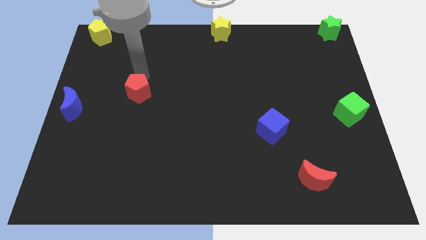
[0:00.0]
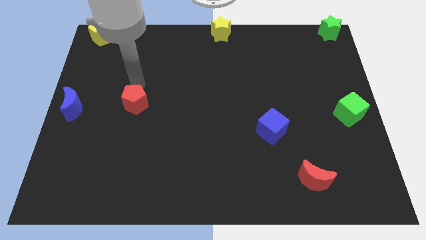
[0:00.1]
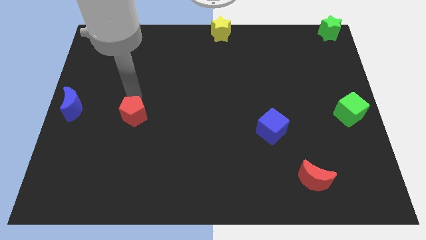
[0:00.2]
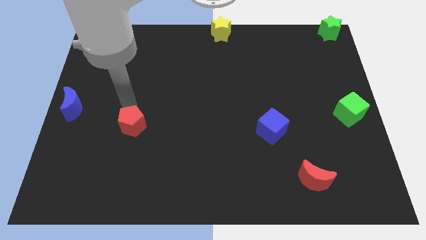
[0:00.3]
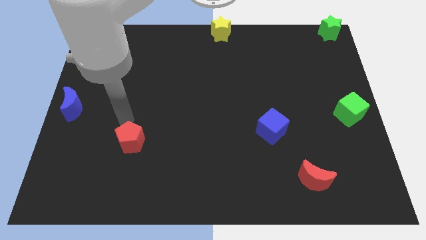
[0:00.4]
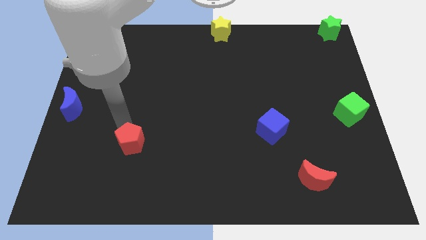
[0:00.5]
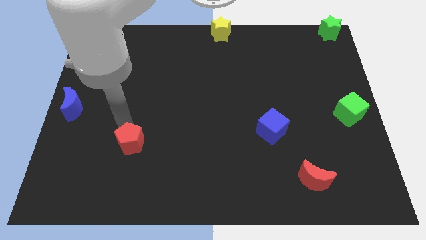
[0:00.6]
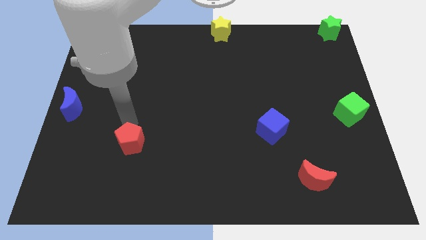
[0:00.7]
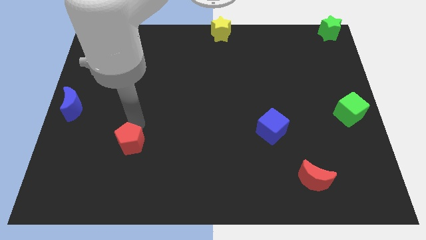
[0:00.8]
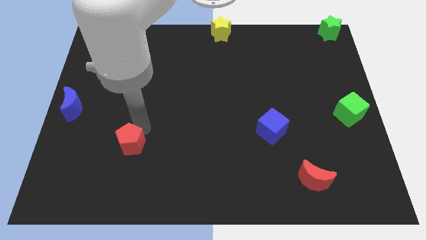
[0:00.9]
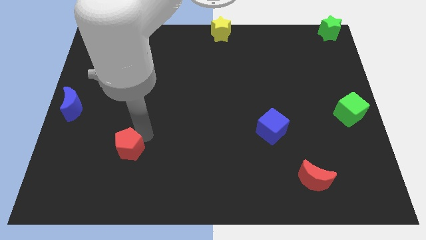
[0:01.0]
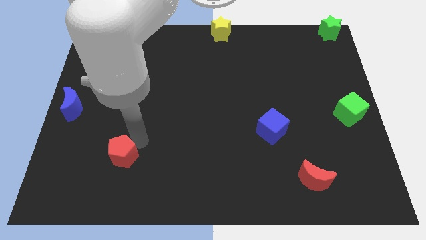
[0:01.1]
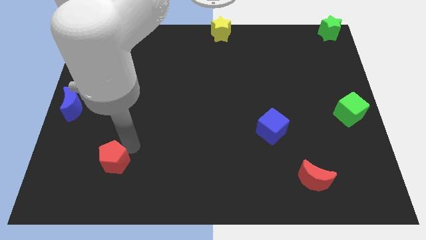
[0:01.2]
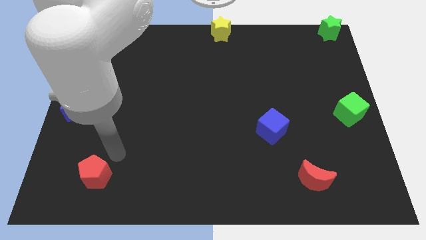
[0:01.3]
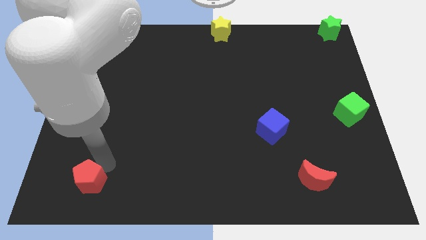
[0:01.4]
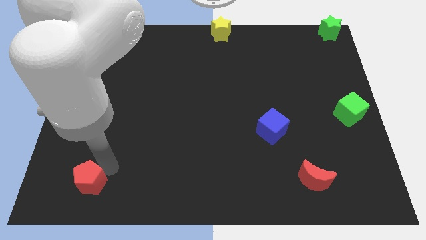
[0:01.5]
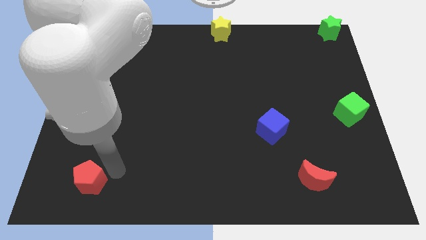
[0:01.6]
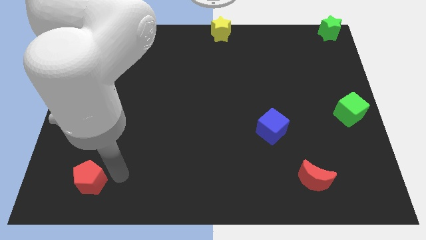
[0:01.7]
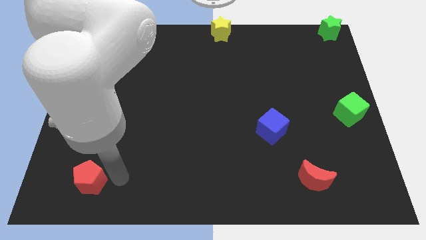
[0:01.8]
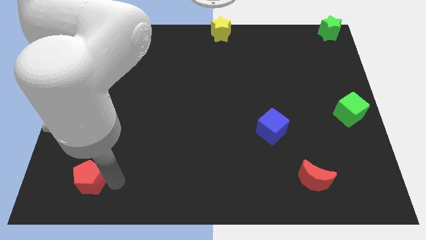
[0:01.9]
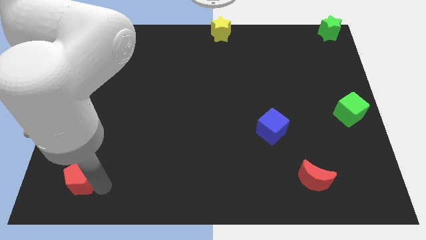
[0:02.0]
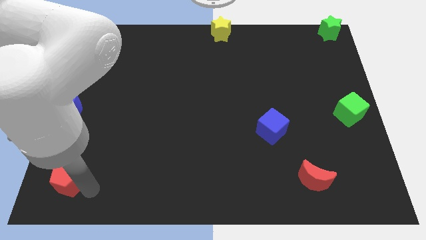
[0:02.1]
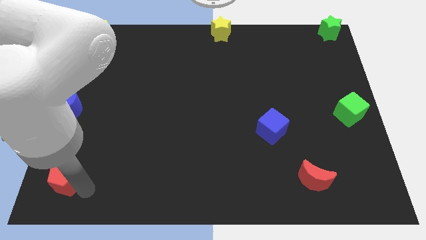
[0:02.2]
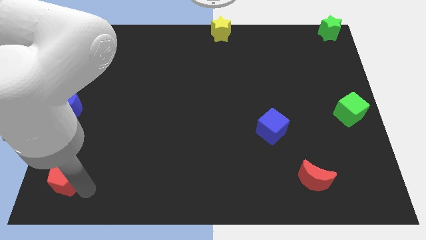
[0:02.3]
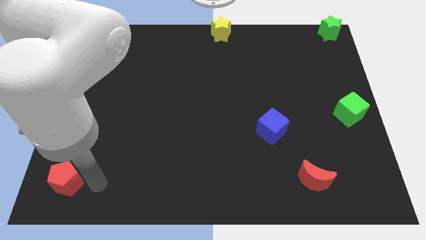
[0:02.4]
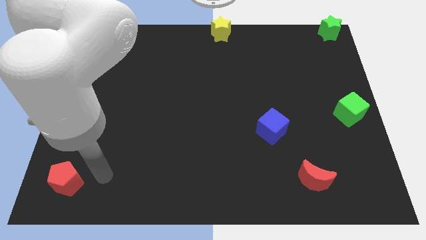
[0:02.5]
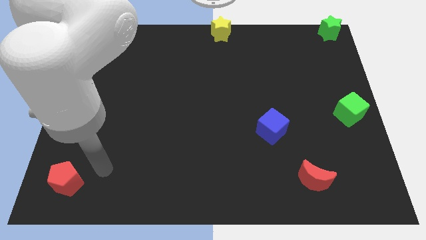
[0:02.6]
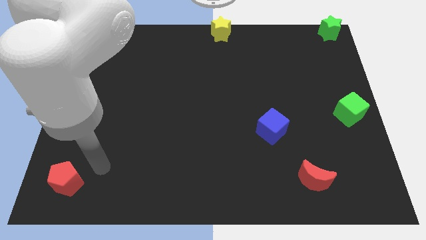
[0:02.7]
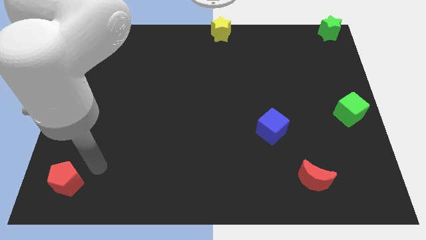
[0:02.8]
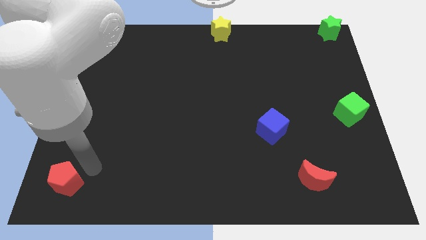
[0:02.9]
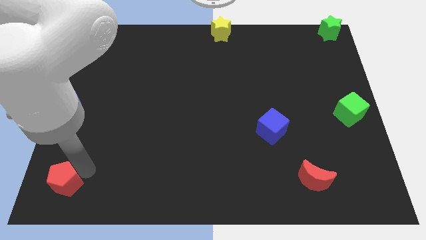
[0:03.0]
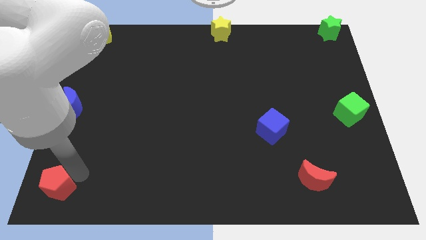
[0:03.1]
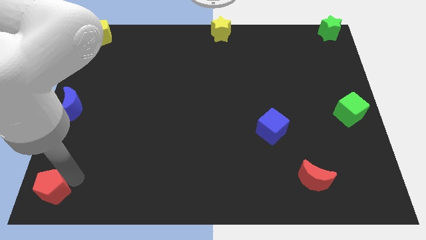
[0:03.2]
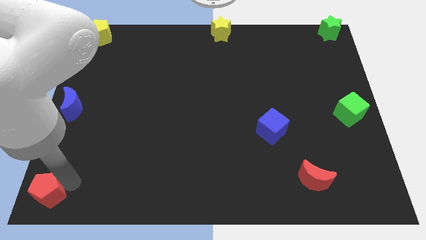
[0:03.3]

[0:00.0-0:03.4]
place the red pentagon below the blue crescent to form a vertical line

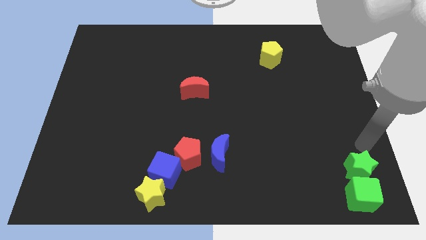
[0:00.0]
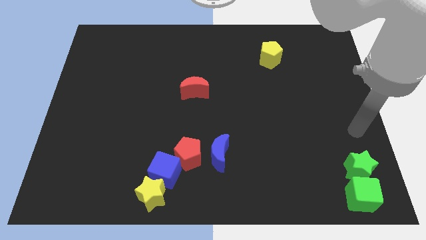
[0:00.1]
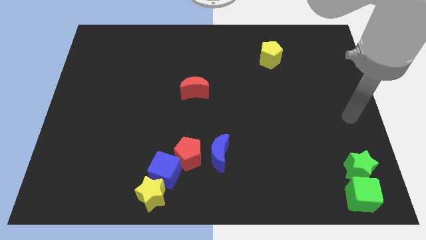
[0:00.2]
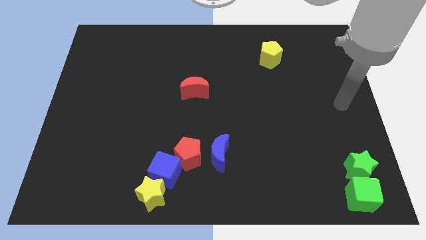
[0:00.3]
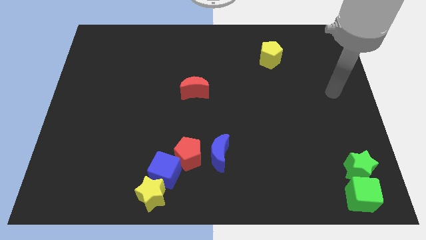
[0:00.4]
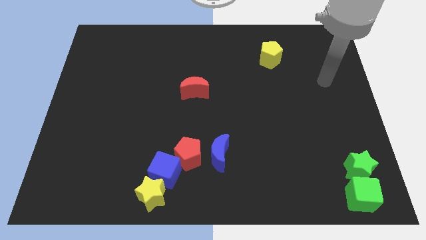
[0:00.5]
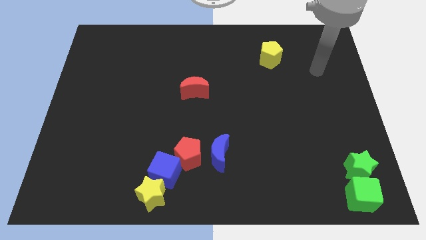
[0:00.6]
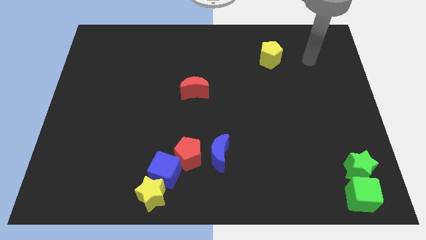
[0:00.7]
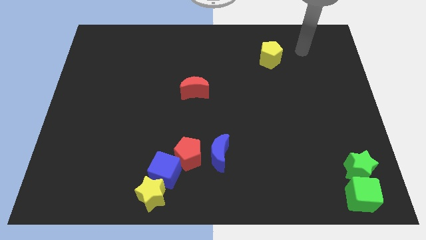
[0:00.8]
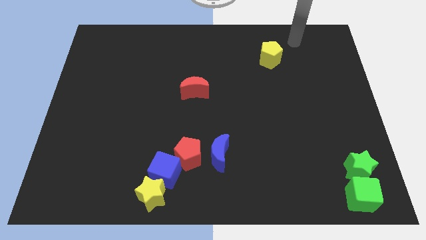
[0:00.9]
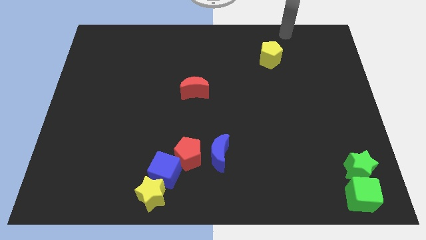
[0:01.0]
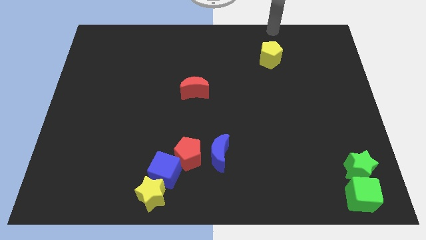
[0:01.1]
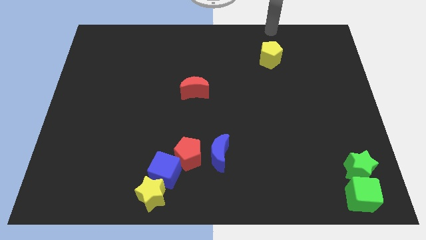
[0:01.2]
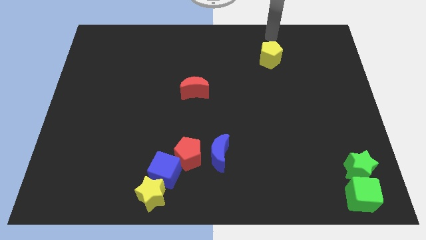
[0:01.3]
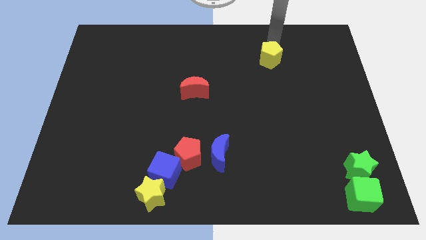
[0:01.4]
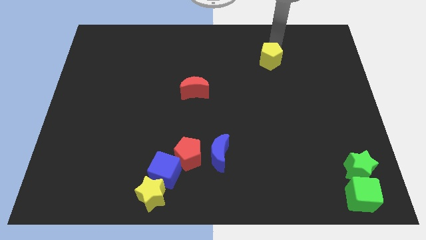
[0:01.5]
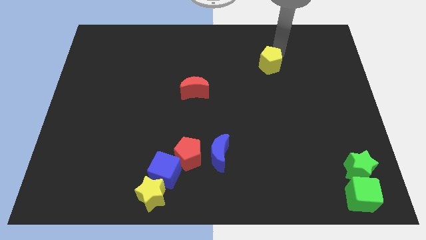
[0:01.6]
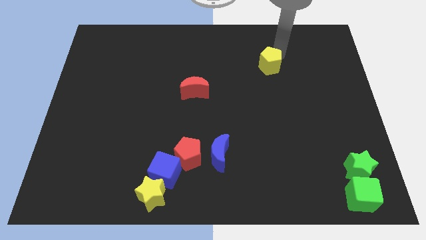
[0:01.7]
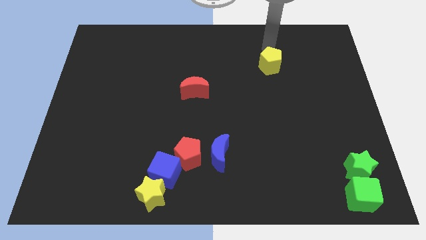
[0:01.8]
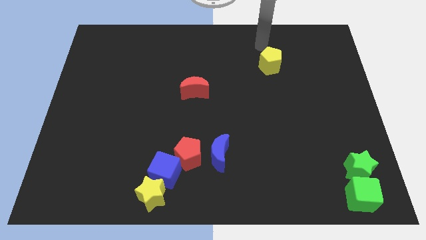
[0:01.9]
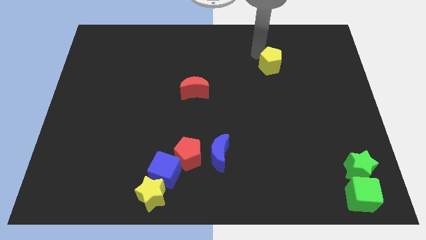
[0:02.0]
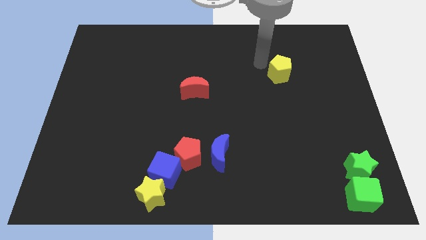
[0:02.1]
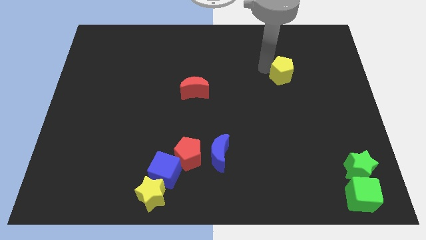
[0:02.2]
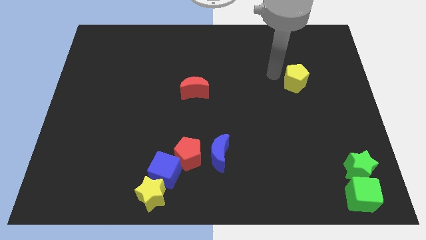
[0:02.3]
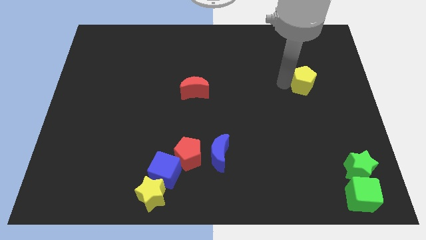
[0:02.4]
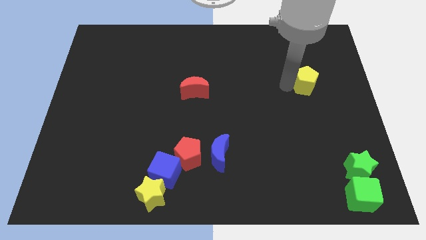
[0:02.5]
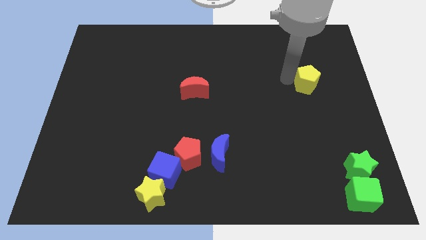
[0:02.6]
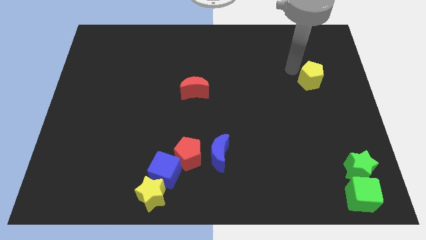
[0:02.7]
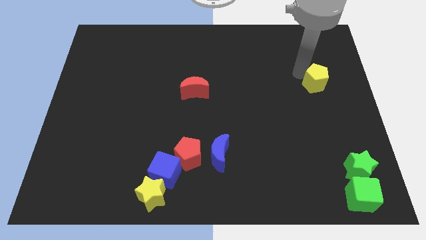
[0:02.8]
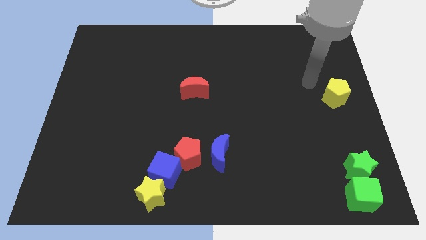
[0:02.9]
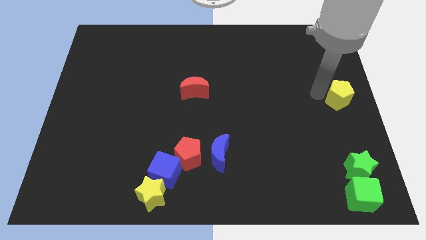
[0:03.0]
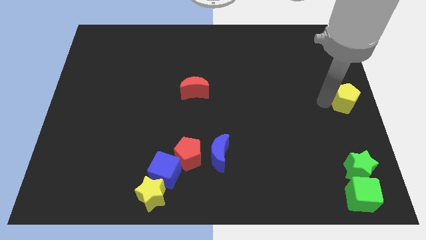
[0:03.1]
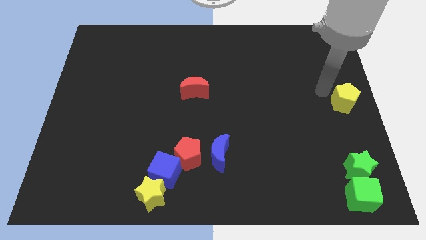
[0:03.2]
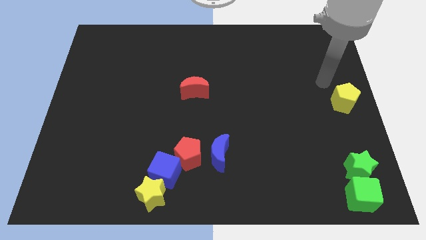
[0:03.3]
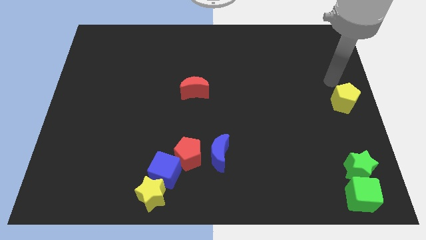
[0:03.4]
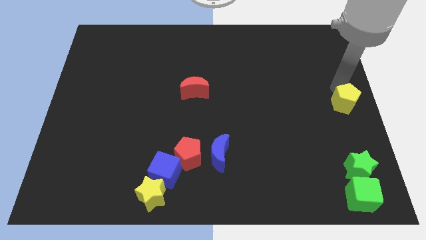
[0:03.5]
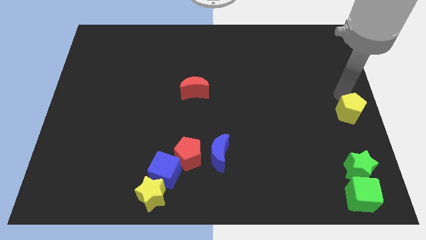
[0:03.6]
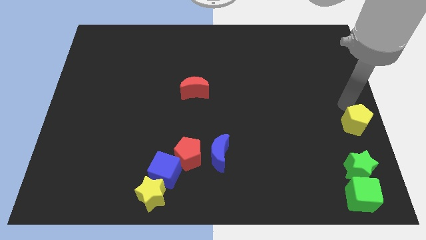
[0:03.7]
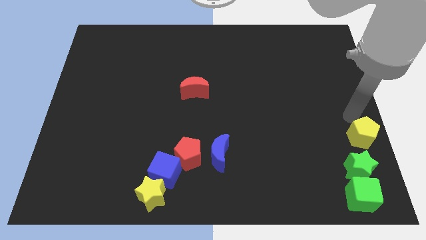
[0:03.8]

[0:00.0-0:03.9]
place the yellow pentagon above the green star

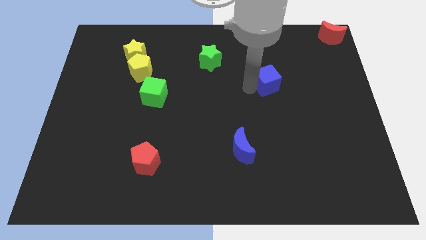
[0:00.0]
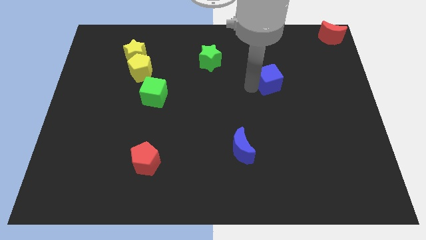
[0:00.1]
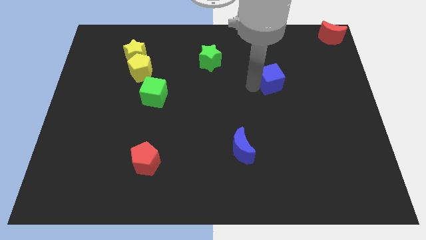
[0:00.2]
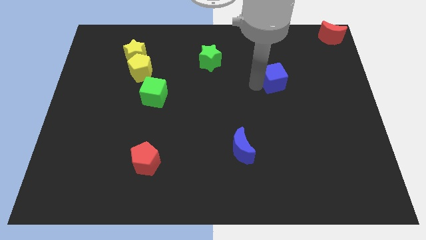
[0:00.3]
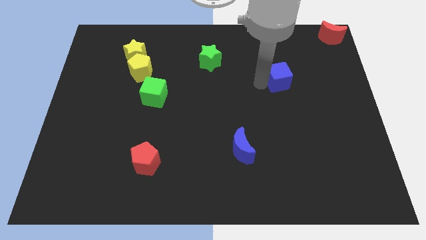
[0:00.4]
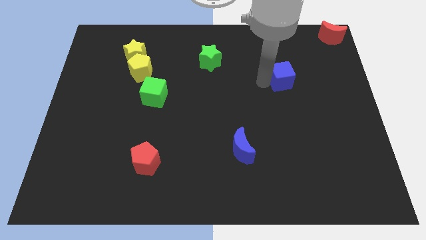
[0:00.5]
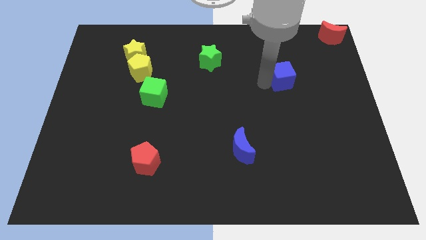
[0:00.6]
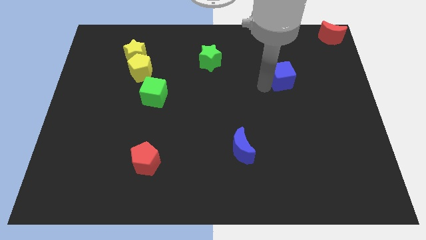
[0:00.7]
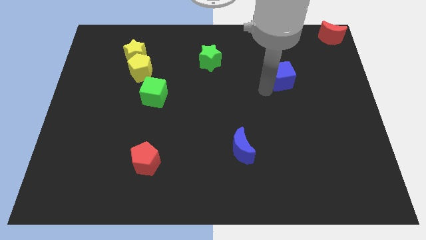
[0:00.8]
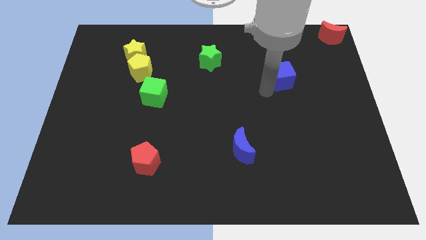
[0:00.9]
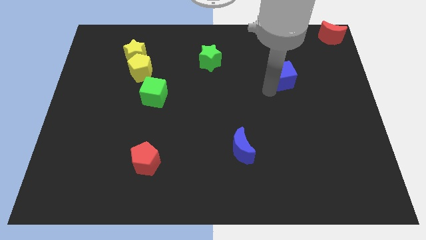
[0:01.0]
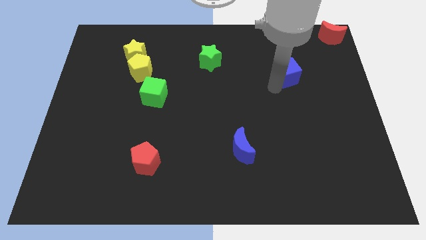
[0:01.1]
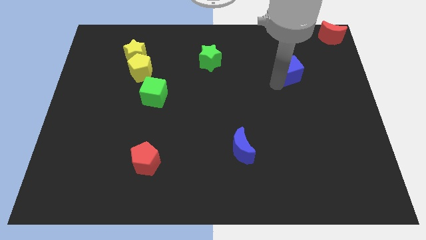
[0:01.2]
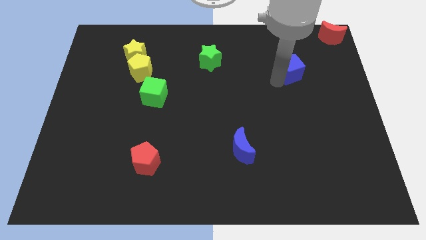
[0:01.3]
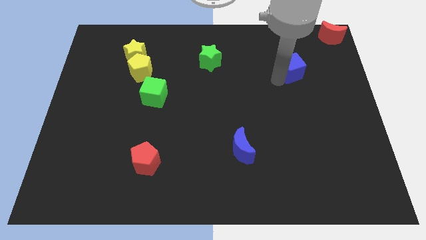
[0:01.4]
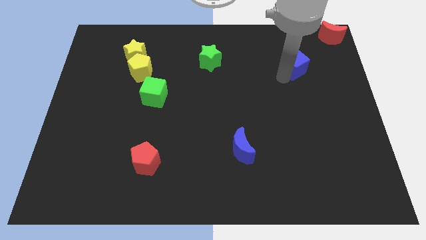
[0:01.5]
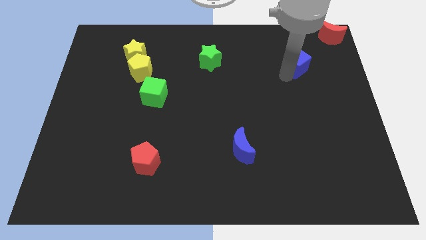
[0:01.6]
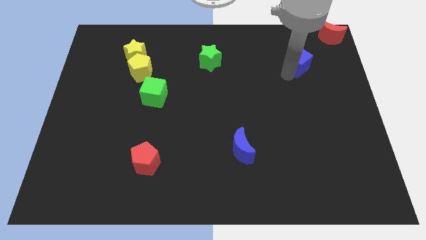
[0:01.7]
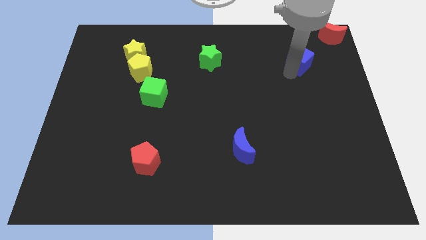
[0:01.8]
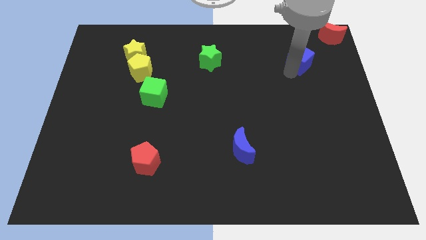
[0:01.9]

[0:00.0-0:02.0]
push the blue cube towards the diagonal bottom left corner of the red crescent
